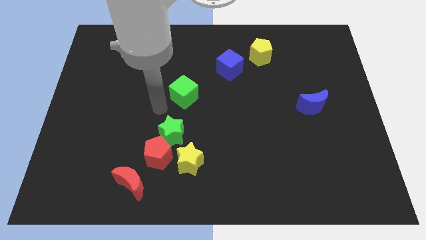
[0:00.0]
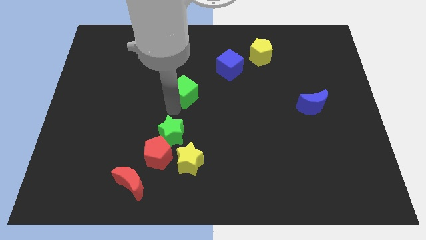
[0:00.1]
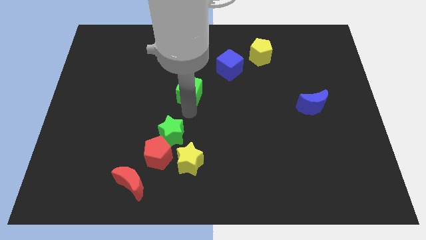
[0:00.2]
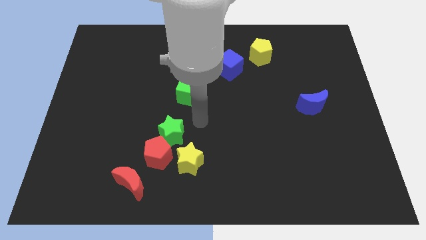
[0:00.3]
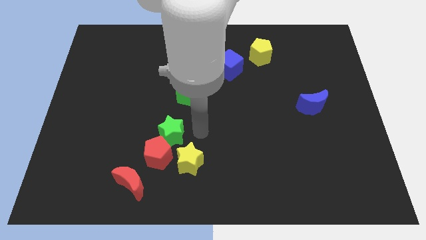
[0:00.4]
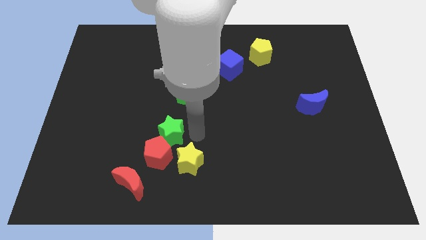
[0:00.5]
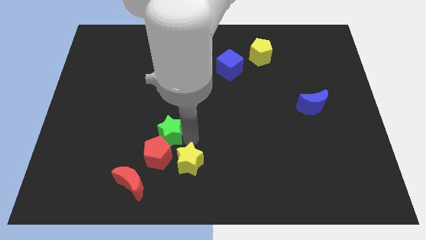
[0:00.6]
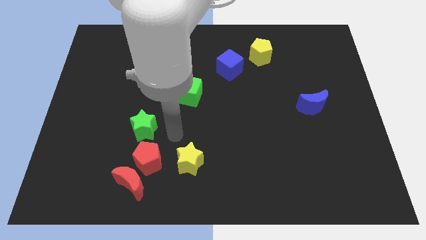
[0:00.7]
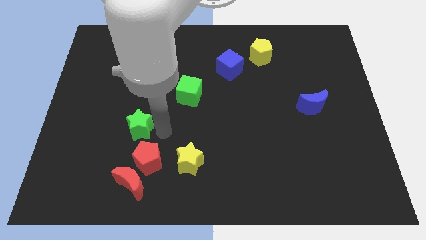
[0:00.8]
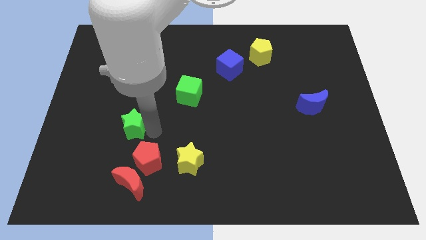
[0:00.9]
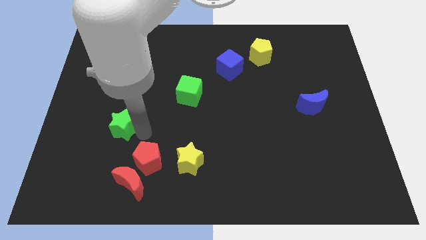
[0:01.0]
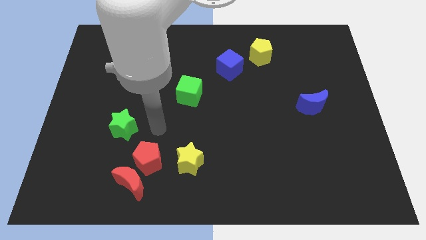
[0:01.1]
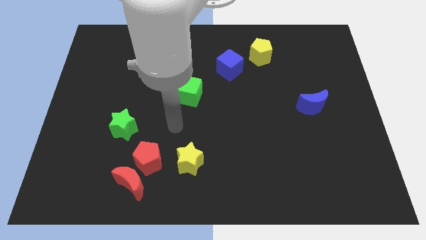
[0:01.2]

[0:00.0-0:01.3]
push green star towards the left side

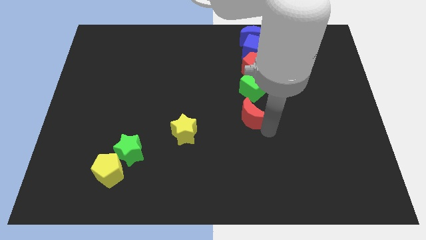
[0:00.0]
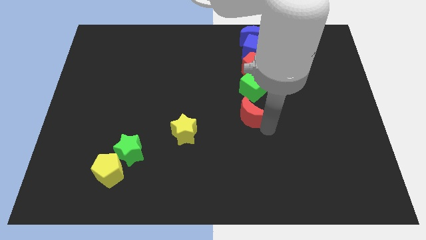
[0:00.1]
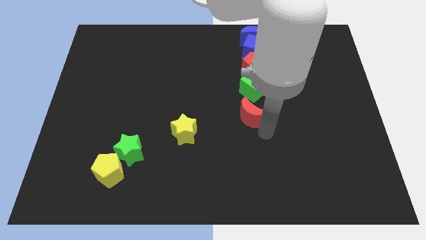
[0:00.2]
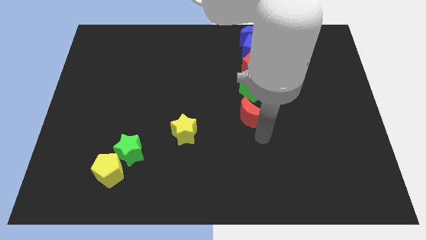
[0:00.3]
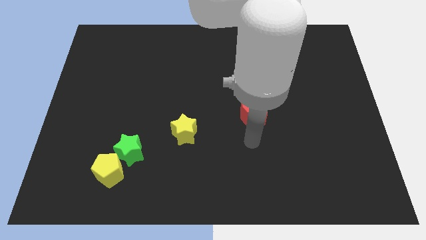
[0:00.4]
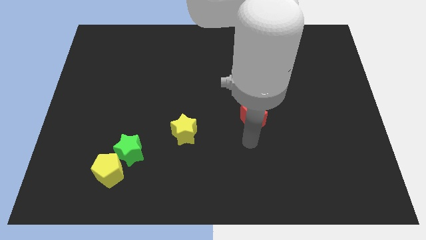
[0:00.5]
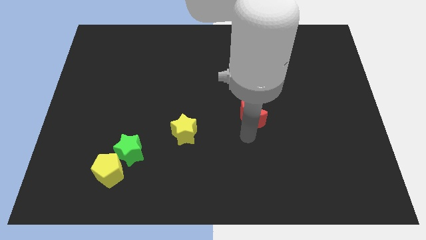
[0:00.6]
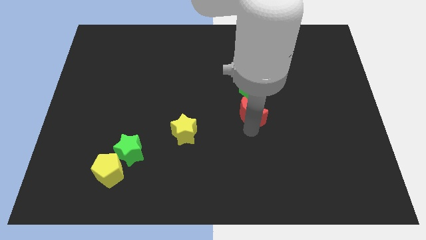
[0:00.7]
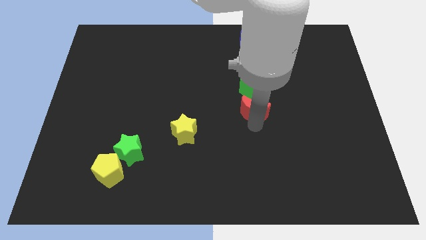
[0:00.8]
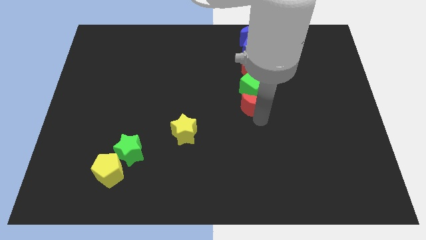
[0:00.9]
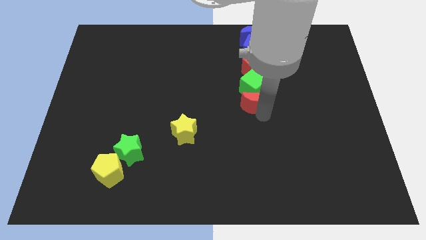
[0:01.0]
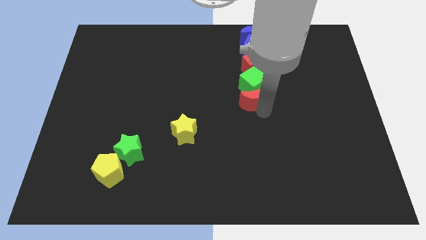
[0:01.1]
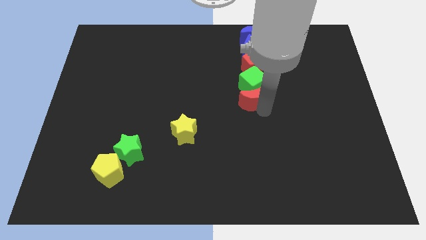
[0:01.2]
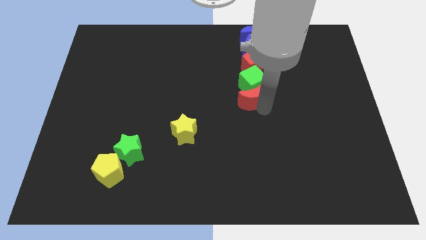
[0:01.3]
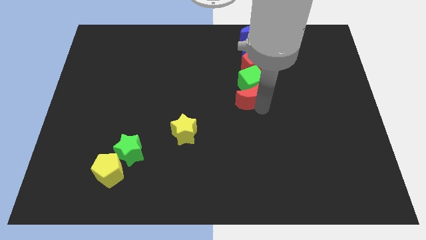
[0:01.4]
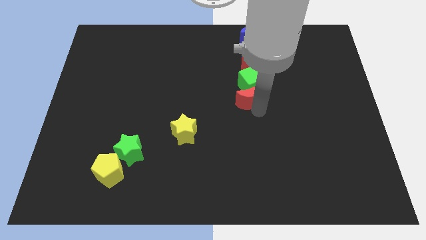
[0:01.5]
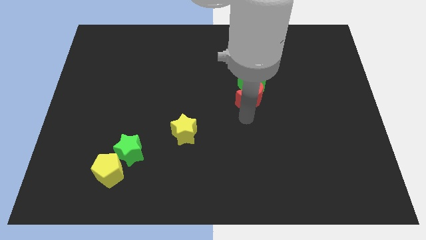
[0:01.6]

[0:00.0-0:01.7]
push the red crescent into the green cube

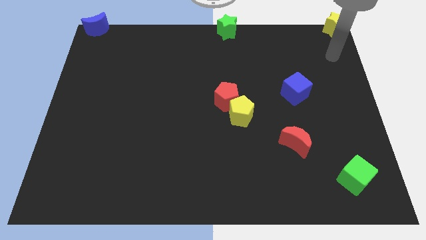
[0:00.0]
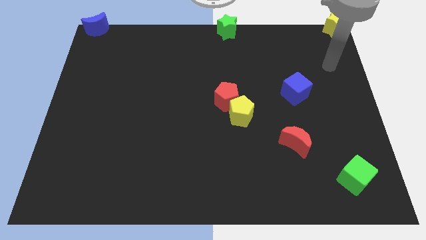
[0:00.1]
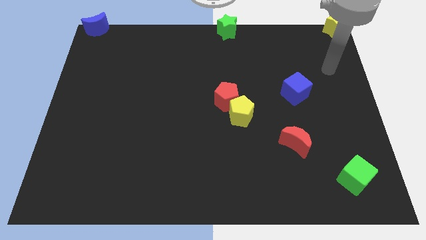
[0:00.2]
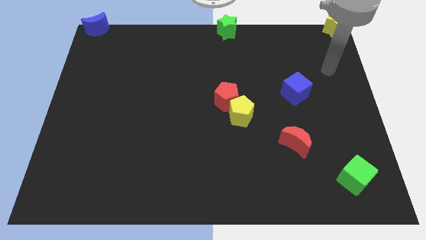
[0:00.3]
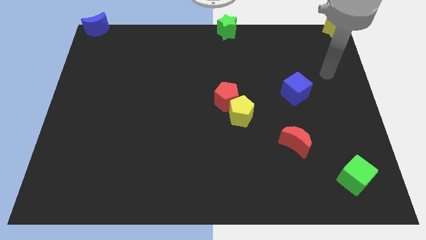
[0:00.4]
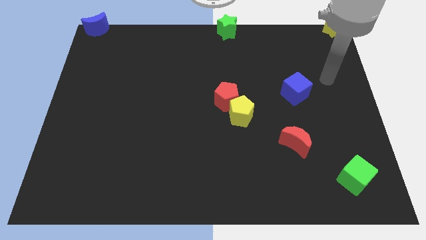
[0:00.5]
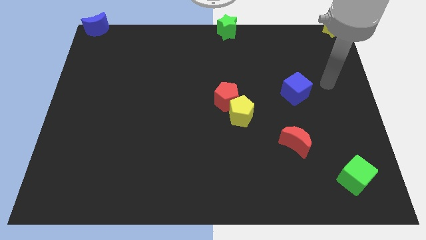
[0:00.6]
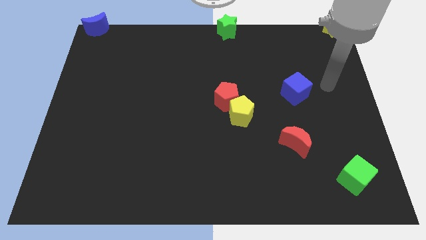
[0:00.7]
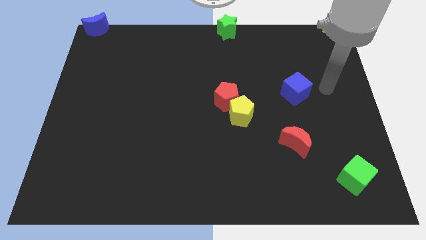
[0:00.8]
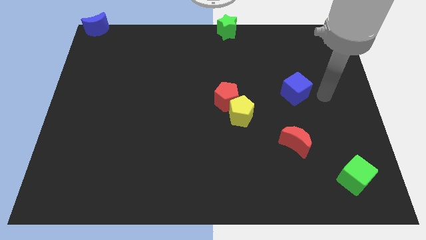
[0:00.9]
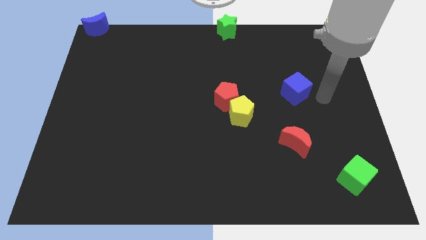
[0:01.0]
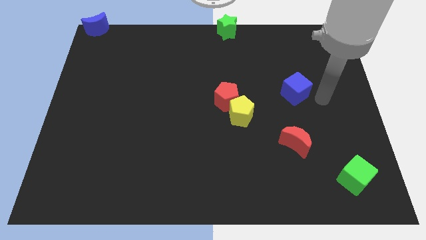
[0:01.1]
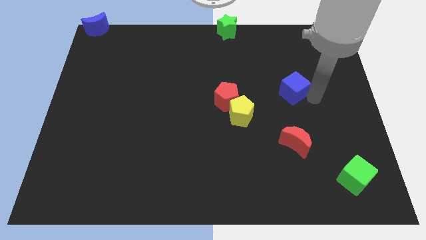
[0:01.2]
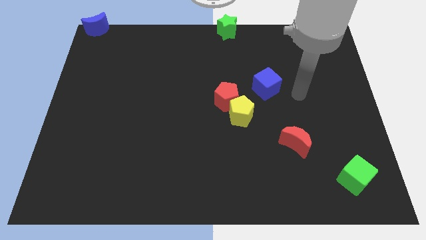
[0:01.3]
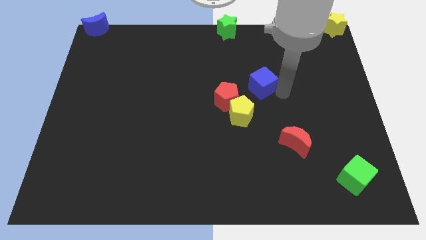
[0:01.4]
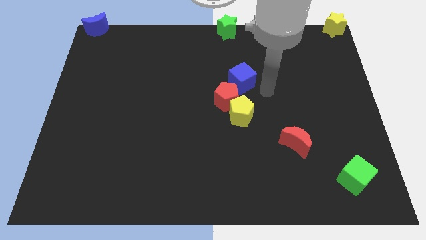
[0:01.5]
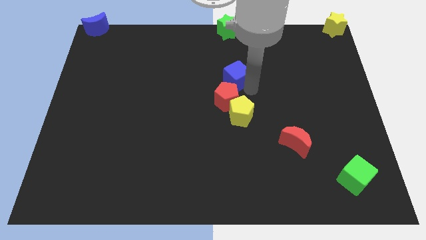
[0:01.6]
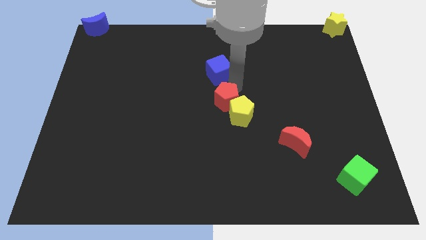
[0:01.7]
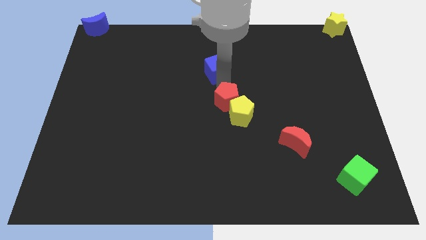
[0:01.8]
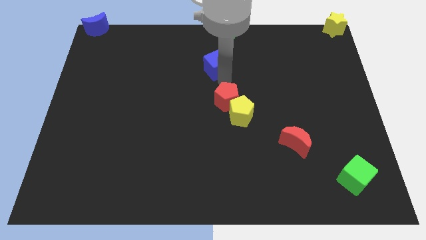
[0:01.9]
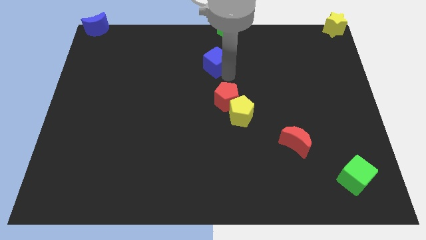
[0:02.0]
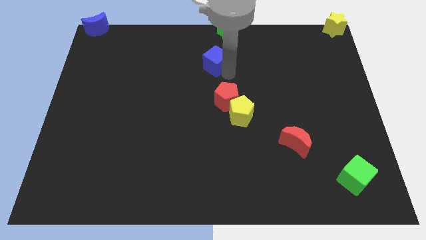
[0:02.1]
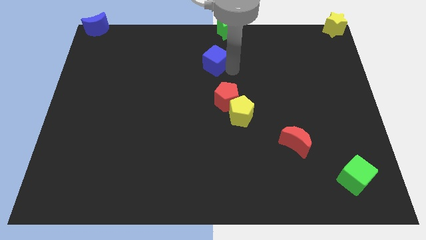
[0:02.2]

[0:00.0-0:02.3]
move the blue cube below green star

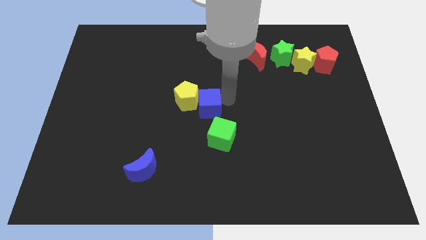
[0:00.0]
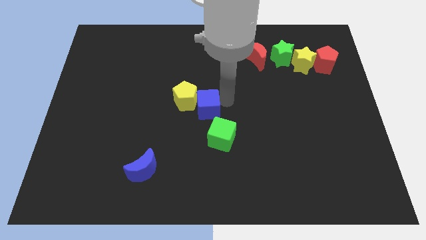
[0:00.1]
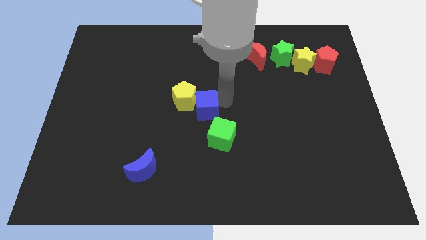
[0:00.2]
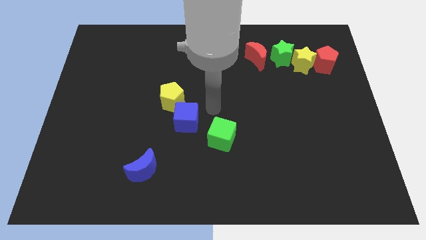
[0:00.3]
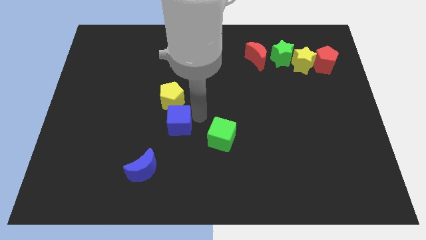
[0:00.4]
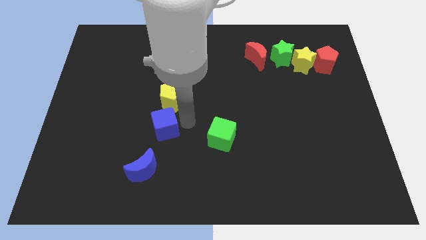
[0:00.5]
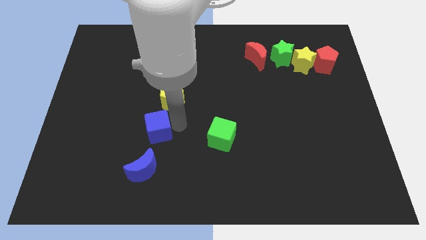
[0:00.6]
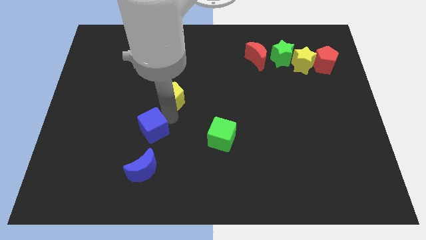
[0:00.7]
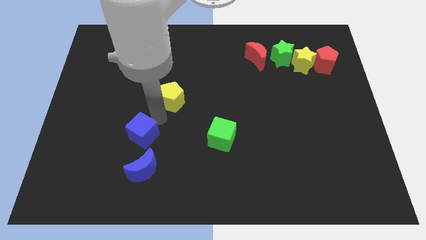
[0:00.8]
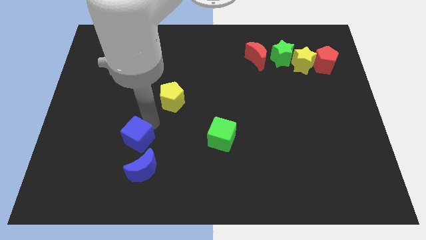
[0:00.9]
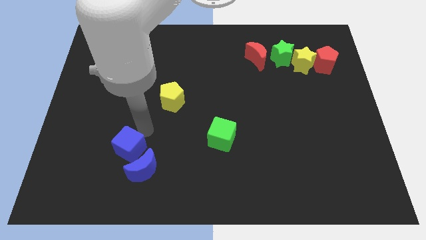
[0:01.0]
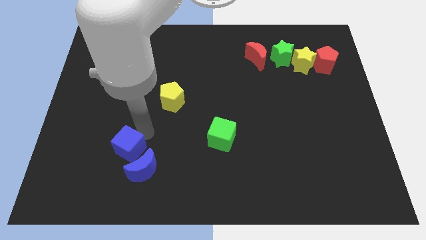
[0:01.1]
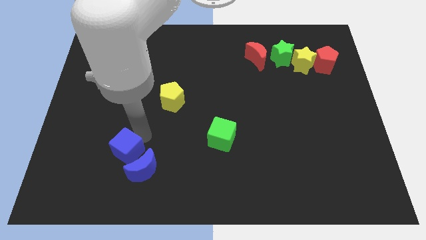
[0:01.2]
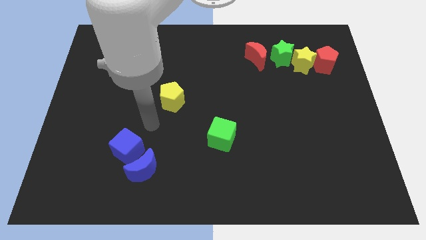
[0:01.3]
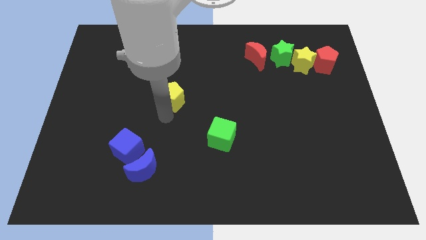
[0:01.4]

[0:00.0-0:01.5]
push the blue cube parallel to the yellow pentagon at the left bottom

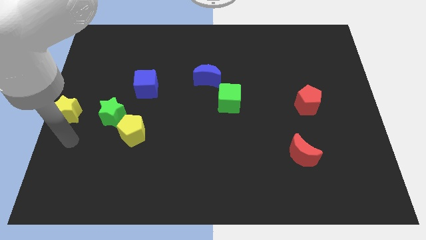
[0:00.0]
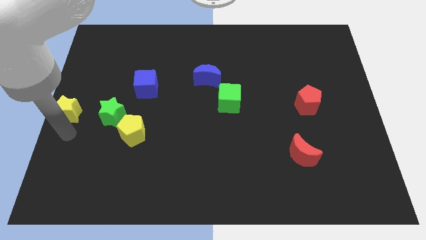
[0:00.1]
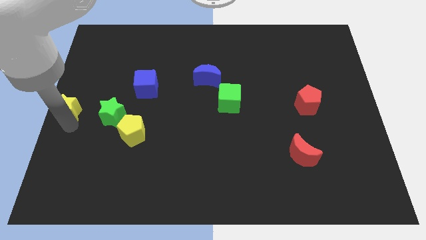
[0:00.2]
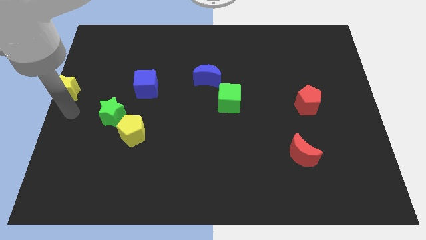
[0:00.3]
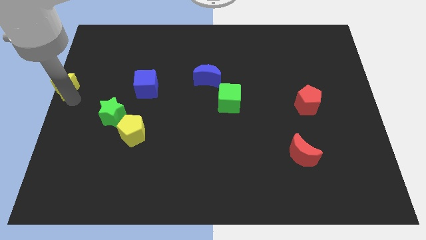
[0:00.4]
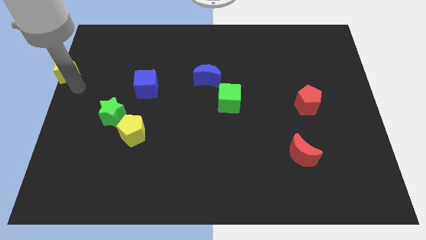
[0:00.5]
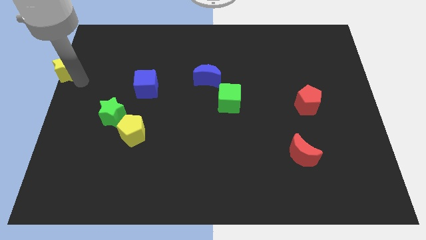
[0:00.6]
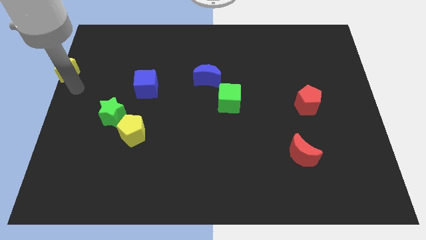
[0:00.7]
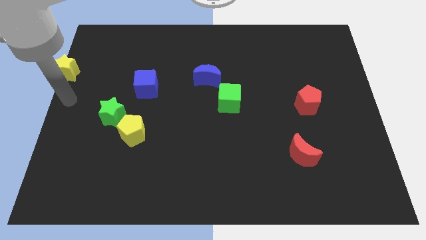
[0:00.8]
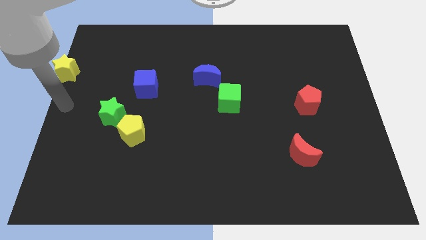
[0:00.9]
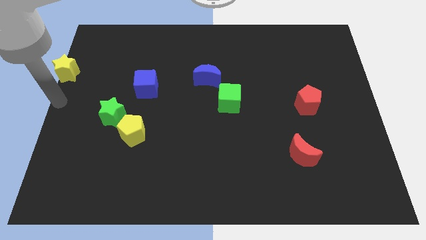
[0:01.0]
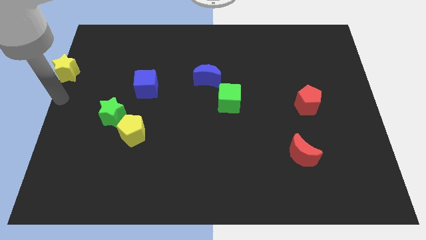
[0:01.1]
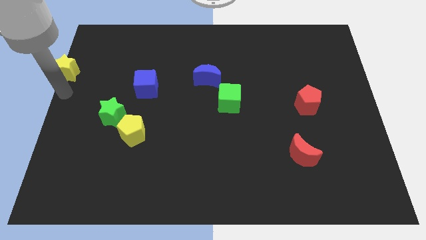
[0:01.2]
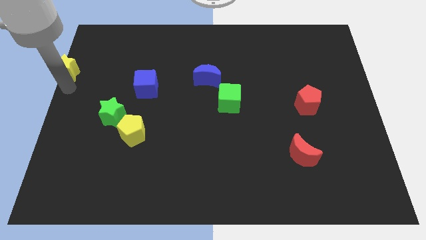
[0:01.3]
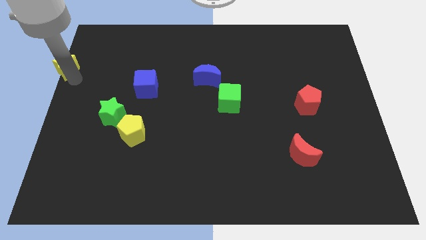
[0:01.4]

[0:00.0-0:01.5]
move the yellow star to the top left of the green star

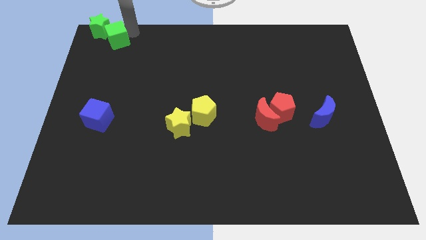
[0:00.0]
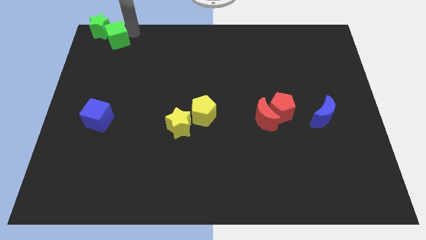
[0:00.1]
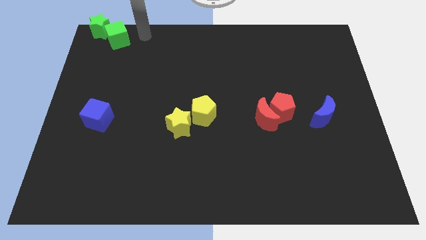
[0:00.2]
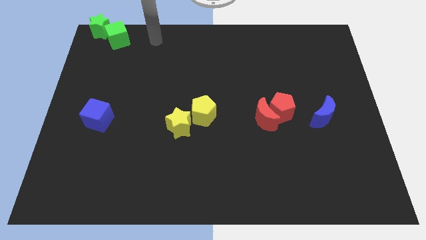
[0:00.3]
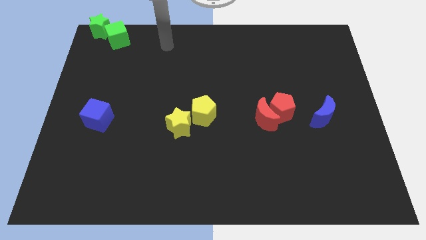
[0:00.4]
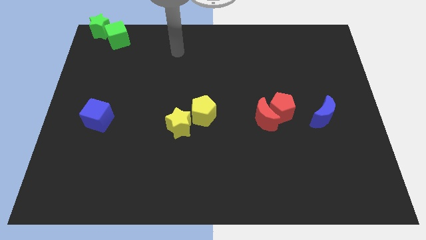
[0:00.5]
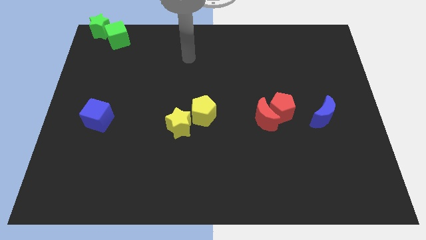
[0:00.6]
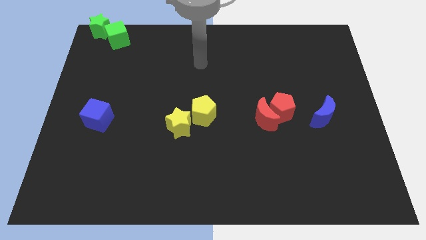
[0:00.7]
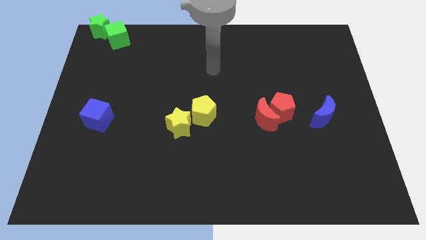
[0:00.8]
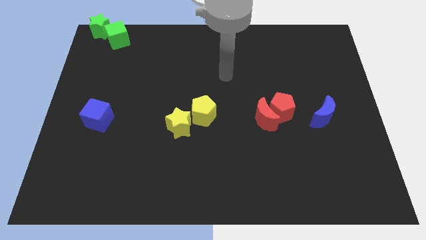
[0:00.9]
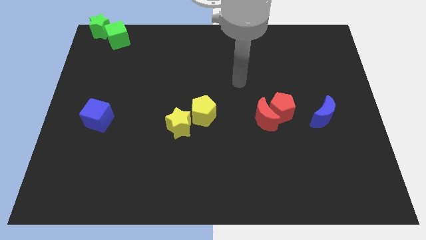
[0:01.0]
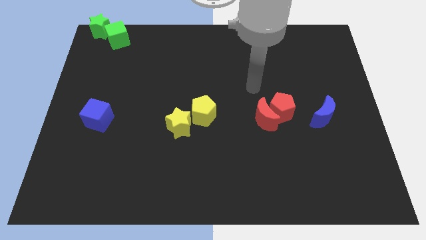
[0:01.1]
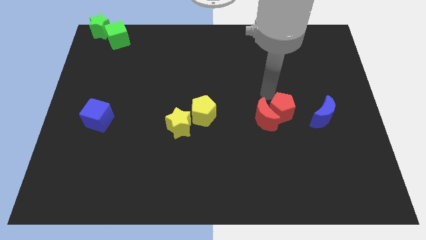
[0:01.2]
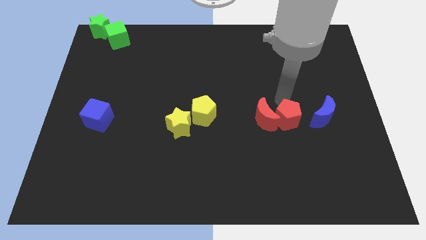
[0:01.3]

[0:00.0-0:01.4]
place the arm diagonally to the red pentagon
